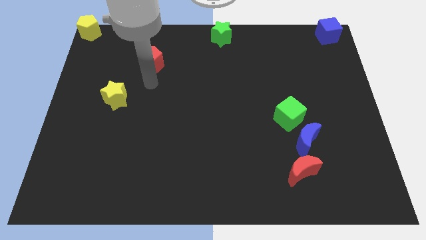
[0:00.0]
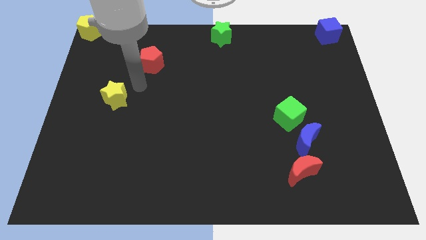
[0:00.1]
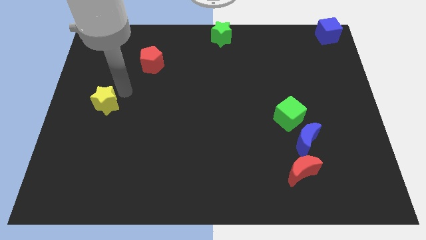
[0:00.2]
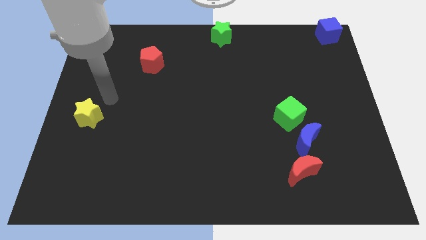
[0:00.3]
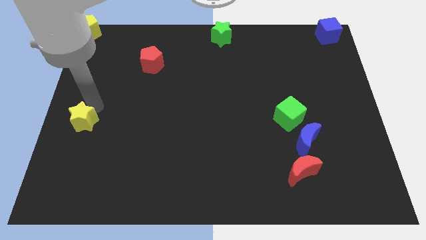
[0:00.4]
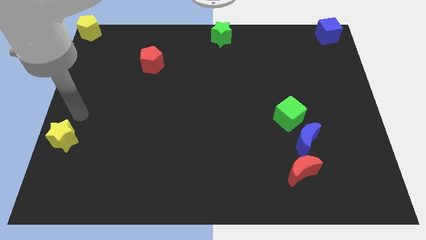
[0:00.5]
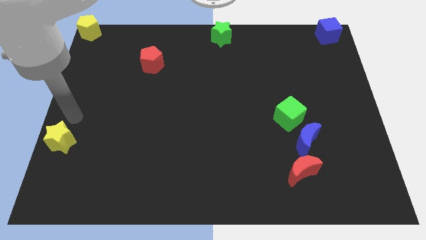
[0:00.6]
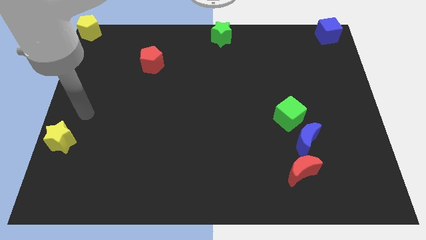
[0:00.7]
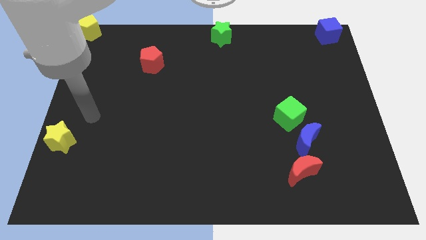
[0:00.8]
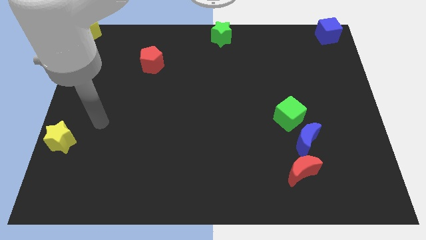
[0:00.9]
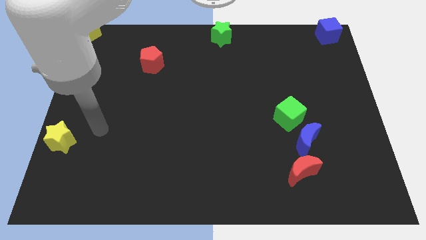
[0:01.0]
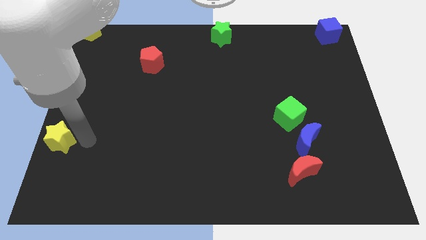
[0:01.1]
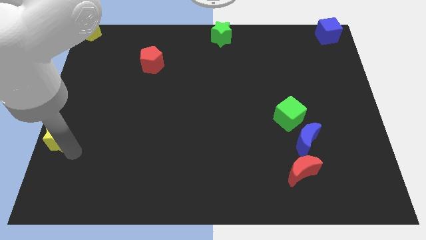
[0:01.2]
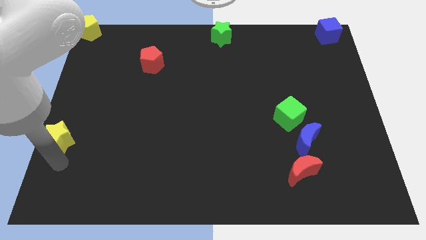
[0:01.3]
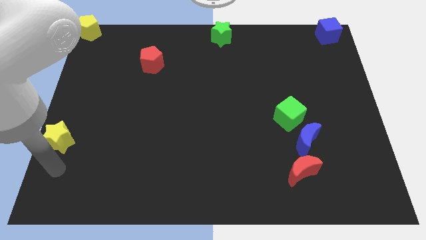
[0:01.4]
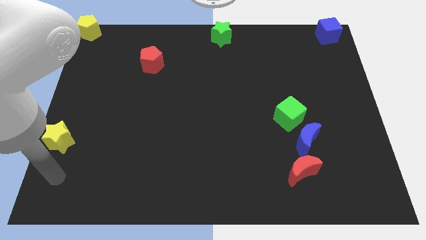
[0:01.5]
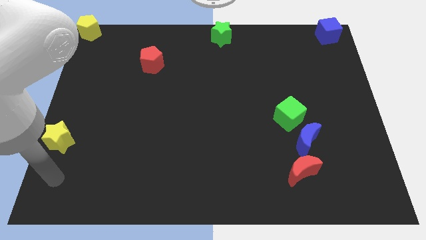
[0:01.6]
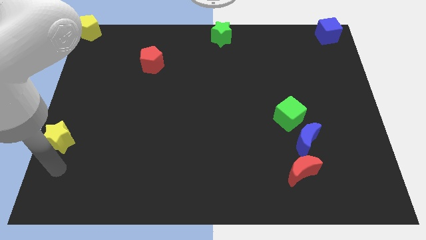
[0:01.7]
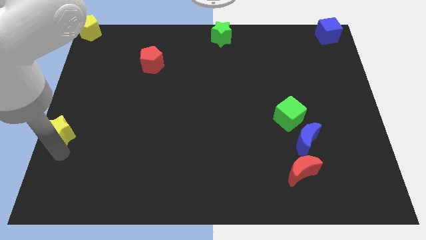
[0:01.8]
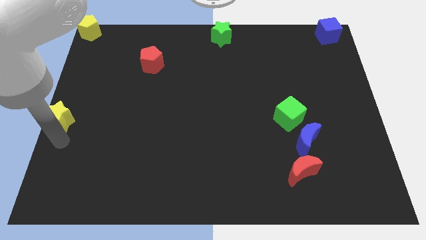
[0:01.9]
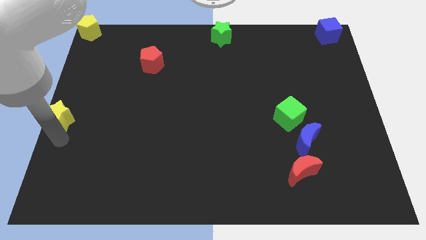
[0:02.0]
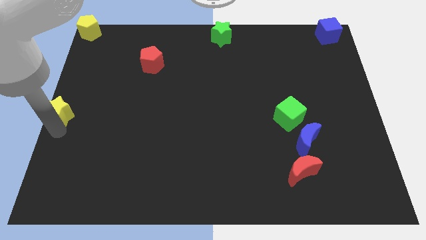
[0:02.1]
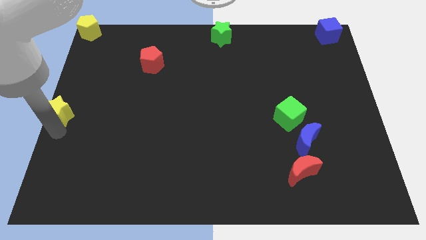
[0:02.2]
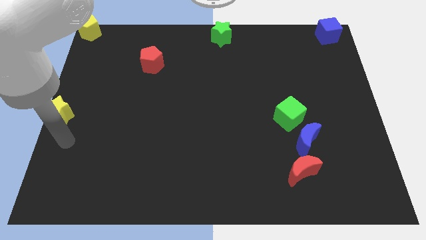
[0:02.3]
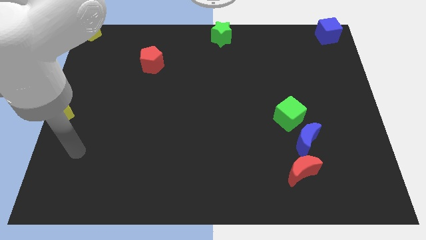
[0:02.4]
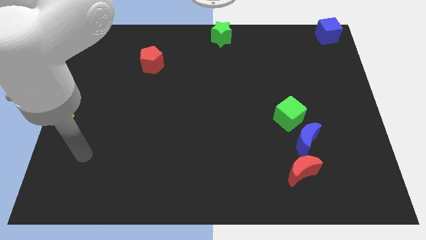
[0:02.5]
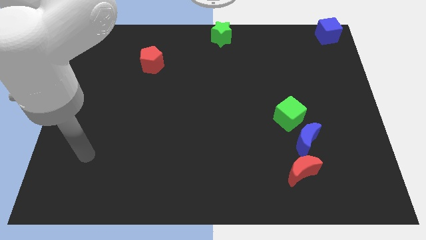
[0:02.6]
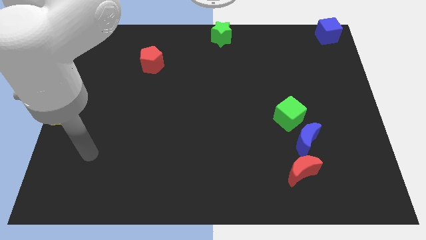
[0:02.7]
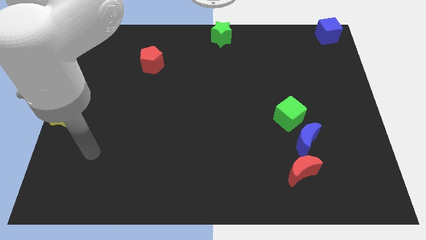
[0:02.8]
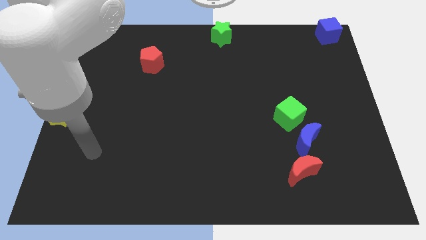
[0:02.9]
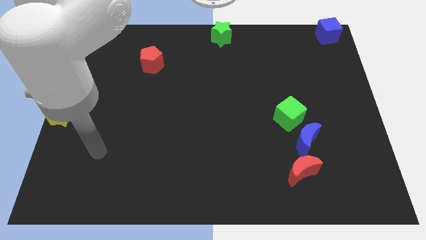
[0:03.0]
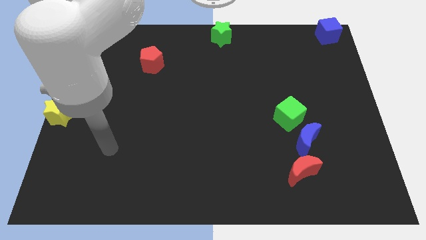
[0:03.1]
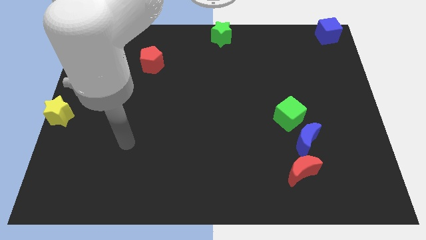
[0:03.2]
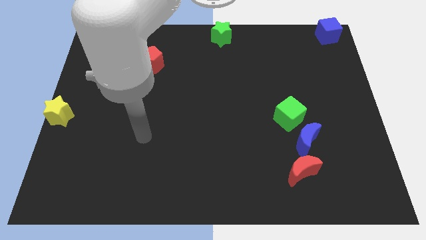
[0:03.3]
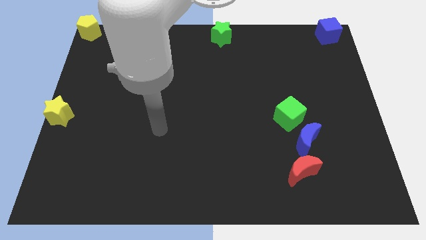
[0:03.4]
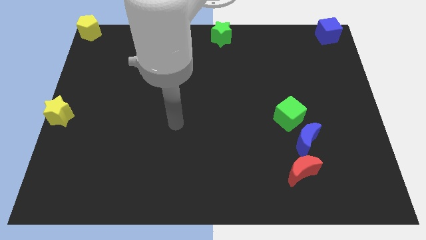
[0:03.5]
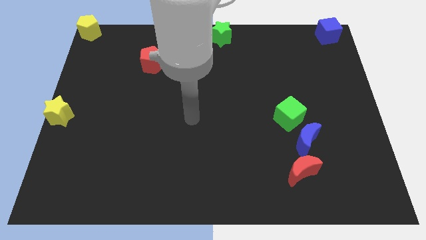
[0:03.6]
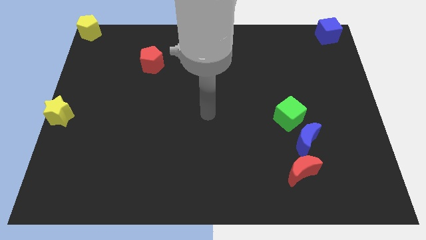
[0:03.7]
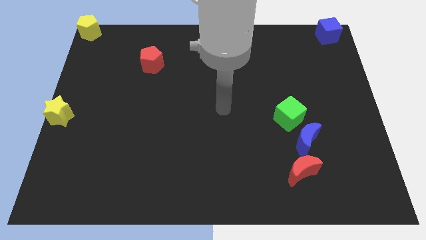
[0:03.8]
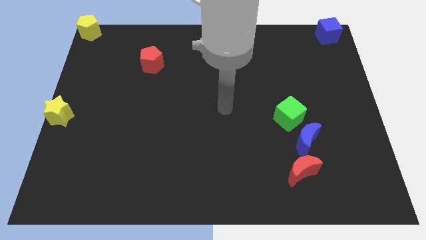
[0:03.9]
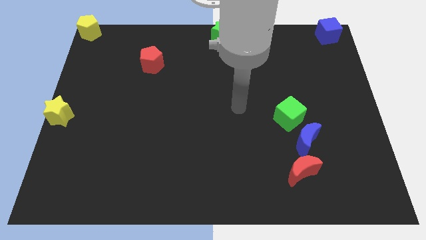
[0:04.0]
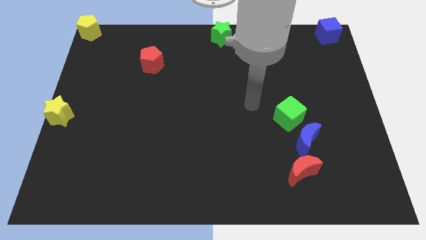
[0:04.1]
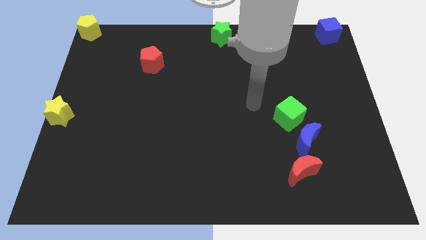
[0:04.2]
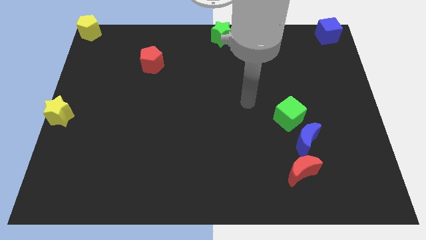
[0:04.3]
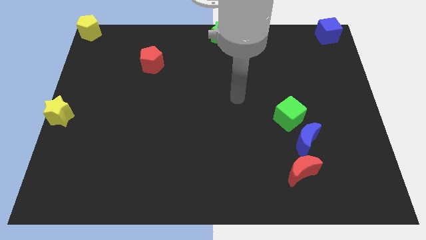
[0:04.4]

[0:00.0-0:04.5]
slightly push the yellow star to the center left

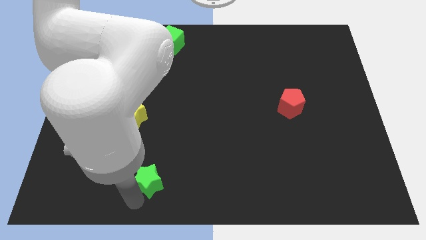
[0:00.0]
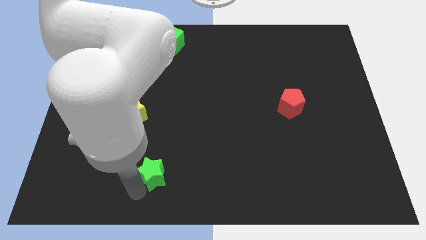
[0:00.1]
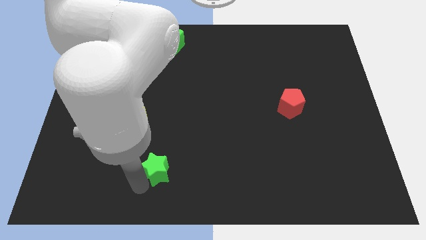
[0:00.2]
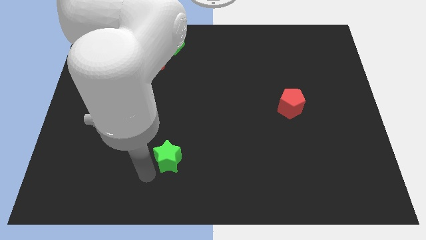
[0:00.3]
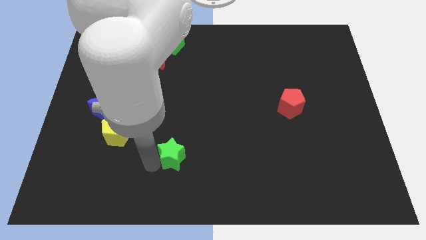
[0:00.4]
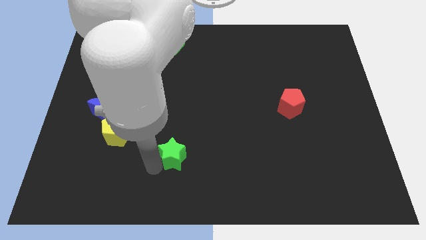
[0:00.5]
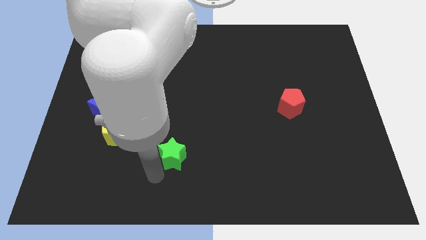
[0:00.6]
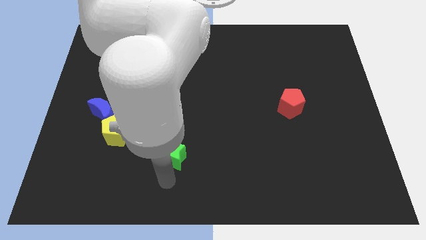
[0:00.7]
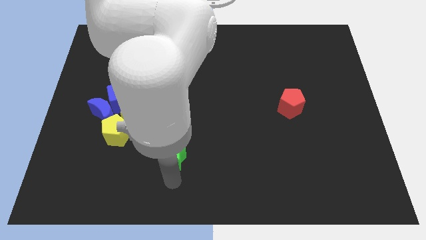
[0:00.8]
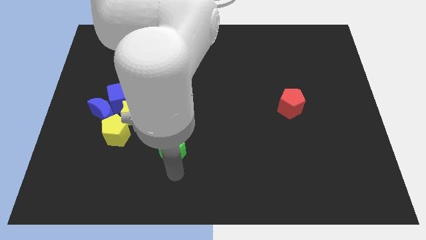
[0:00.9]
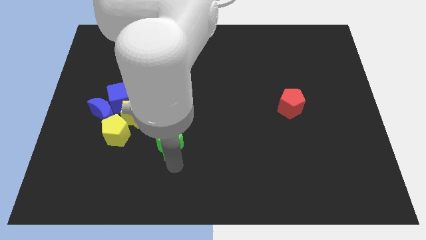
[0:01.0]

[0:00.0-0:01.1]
slightly move the green star to the bottom center

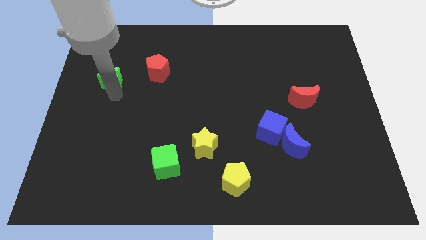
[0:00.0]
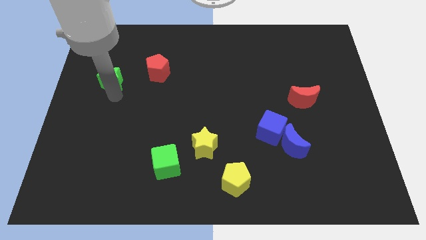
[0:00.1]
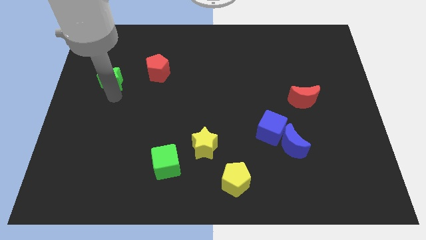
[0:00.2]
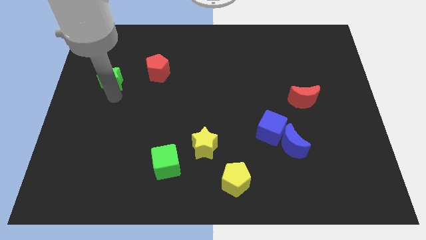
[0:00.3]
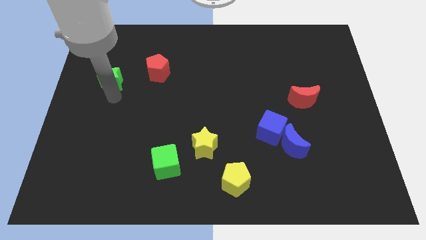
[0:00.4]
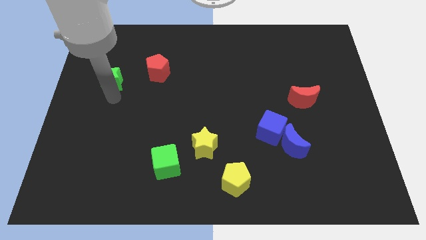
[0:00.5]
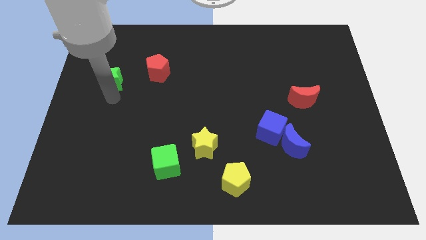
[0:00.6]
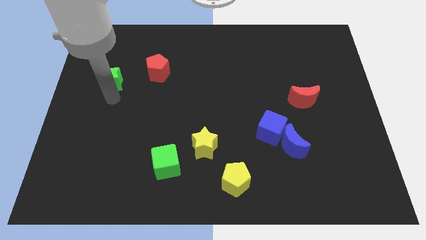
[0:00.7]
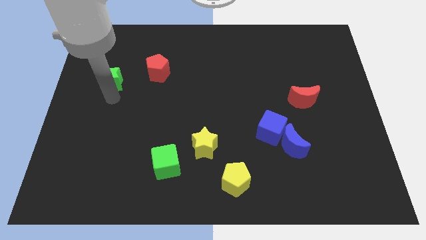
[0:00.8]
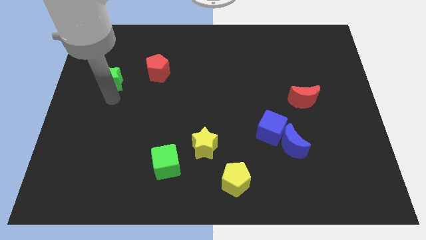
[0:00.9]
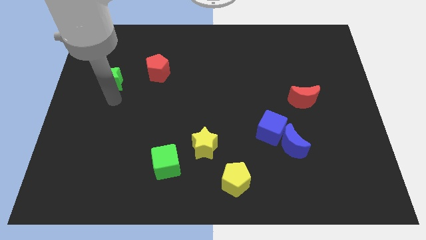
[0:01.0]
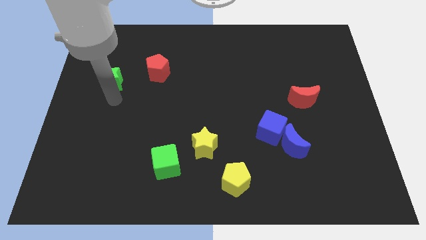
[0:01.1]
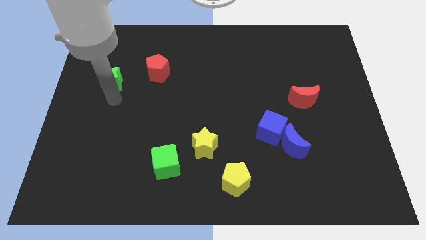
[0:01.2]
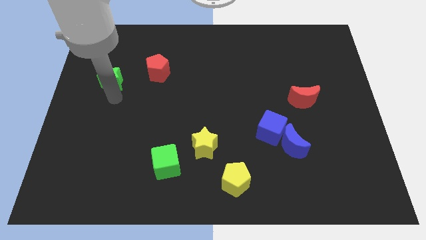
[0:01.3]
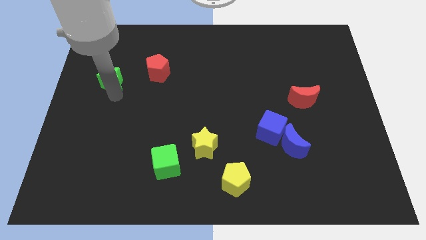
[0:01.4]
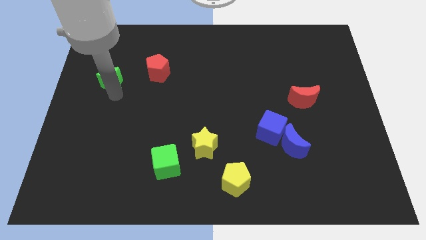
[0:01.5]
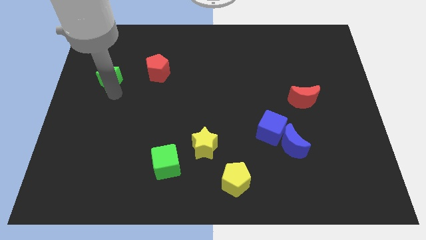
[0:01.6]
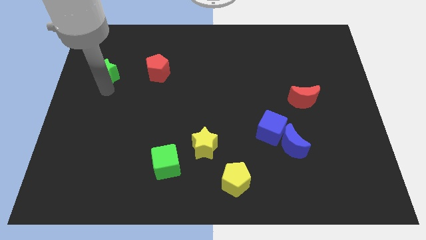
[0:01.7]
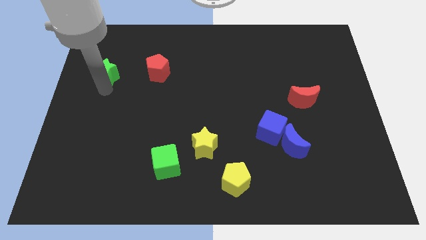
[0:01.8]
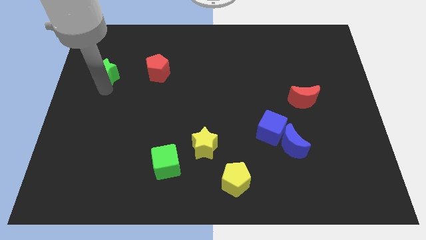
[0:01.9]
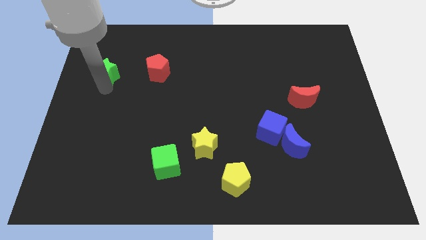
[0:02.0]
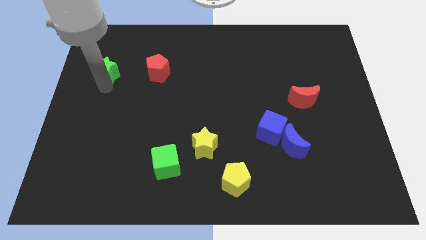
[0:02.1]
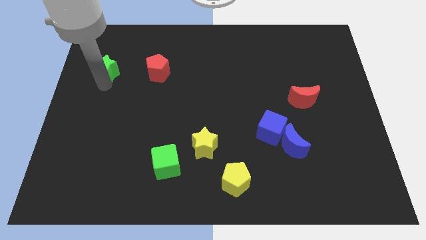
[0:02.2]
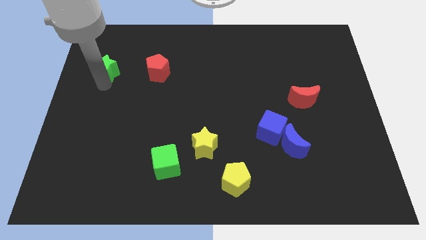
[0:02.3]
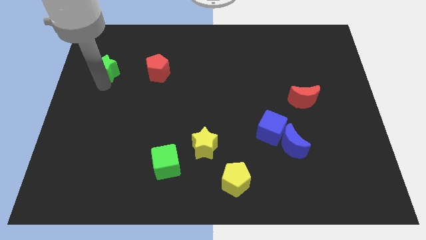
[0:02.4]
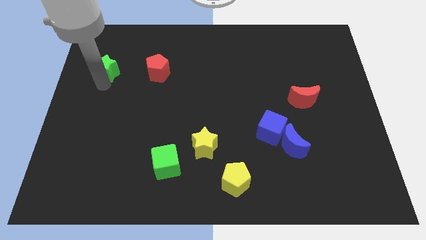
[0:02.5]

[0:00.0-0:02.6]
place the green star left to the red pentagon

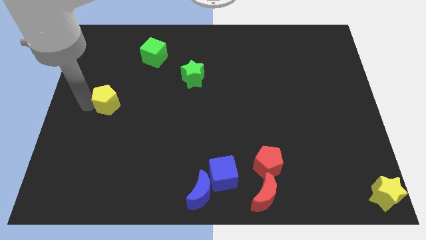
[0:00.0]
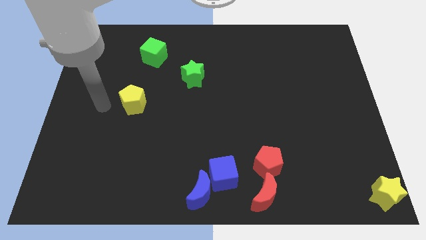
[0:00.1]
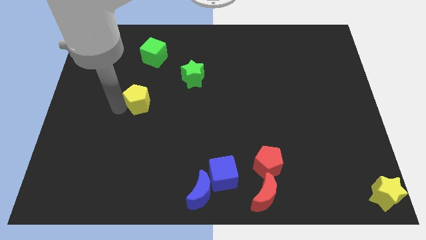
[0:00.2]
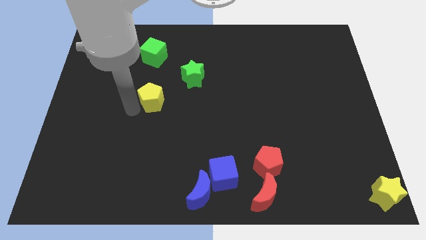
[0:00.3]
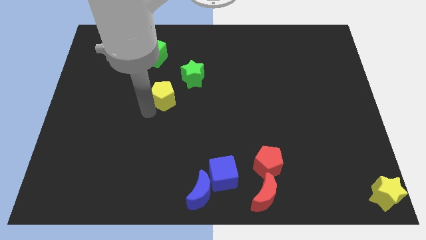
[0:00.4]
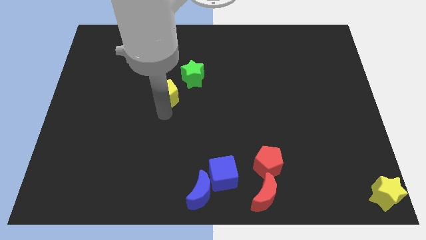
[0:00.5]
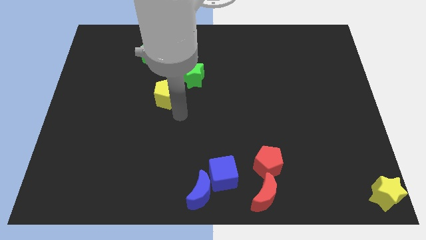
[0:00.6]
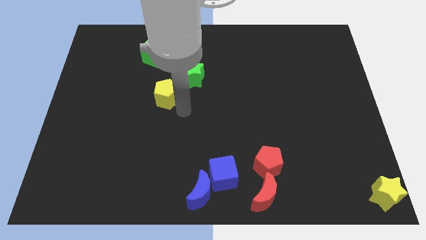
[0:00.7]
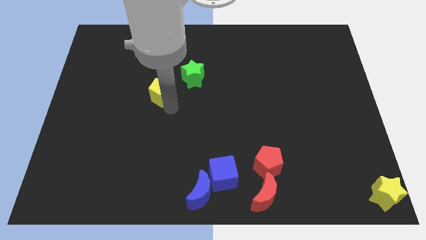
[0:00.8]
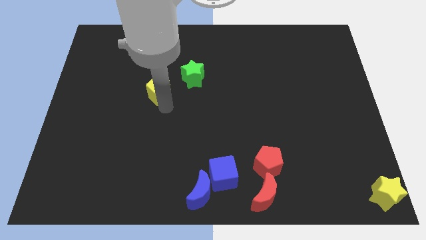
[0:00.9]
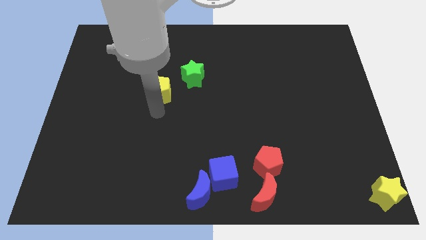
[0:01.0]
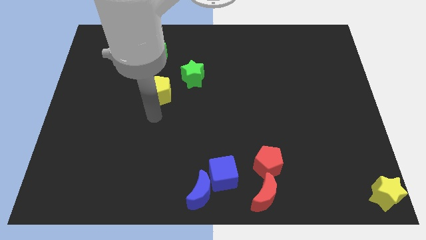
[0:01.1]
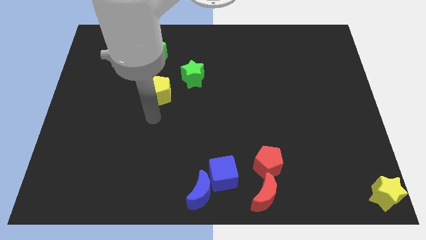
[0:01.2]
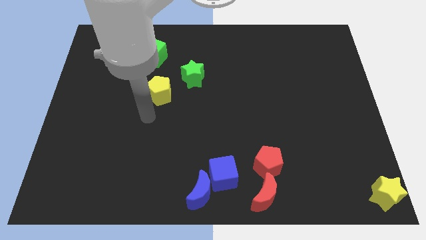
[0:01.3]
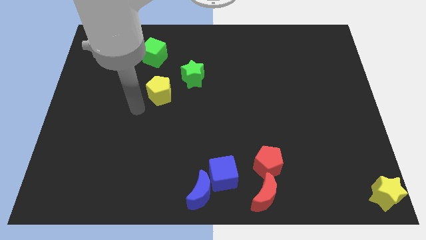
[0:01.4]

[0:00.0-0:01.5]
place the yellow pentagon at the bottom left side of the green star
